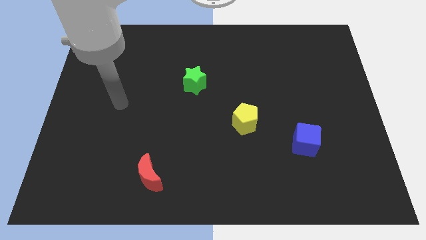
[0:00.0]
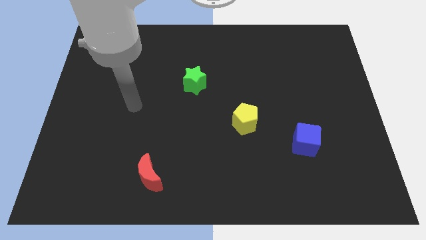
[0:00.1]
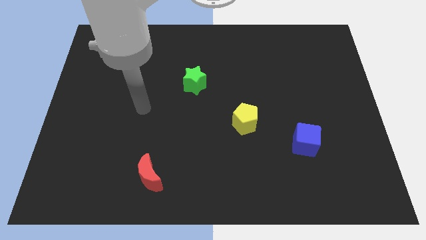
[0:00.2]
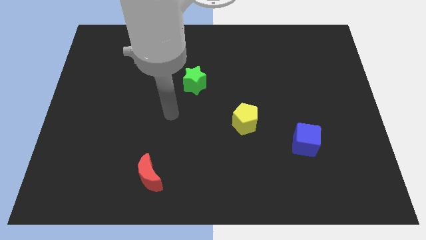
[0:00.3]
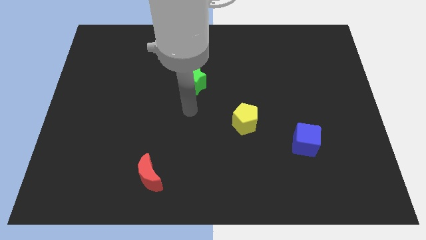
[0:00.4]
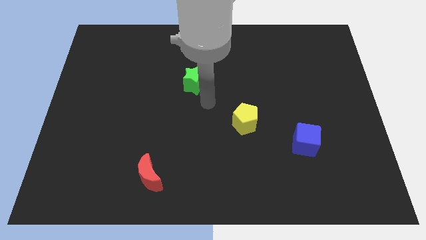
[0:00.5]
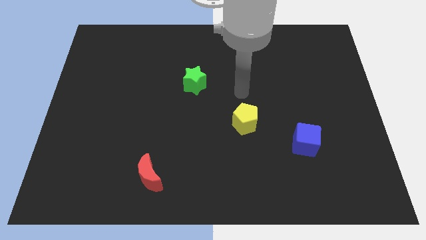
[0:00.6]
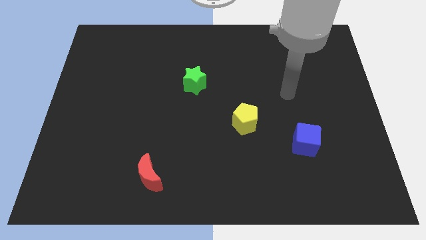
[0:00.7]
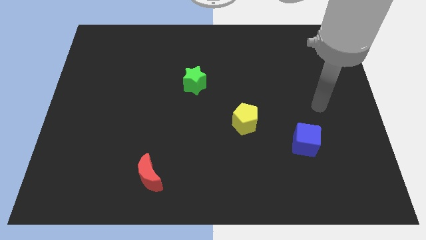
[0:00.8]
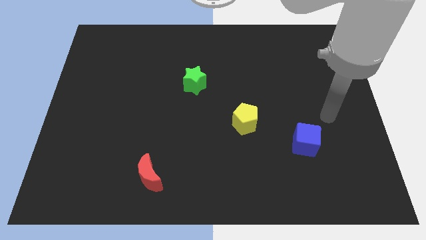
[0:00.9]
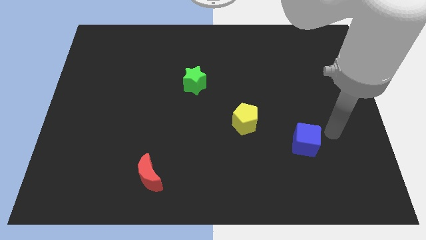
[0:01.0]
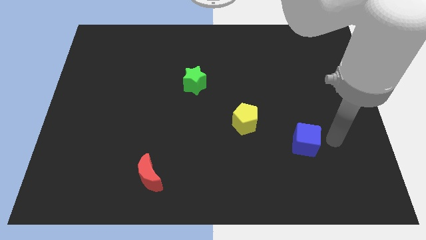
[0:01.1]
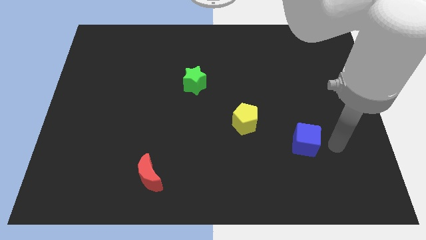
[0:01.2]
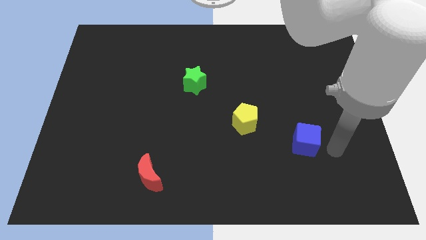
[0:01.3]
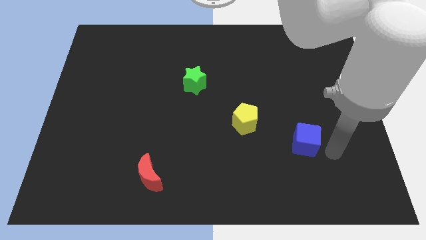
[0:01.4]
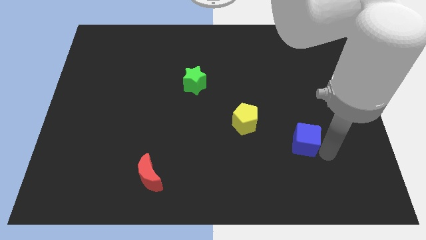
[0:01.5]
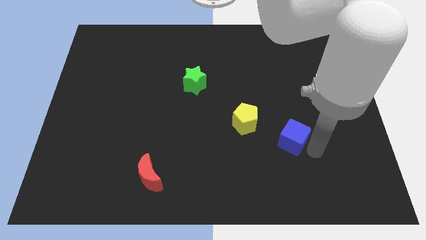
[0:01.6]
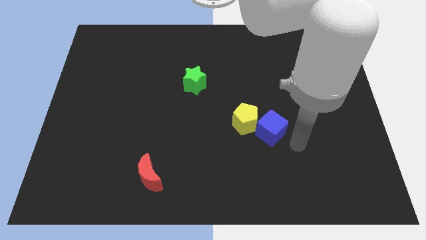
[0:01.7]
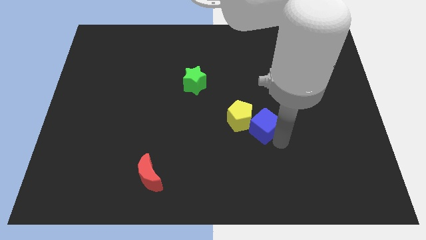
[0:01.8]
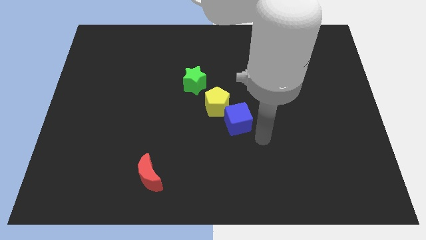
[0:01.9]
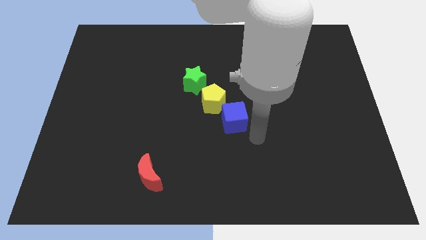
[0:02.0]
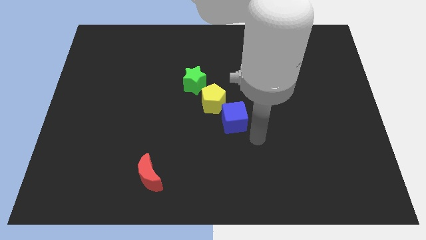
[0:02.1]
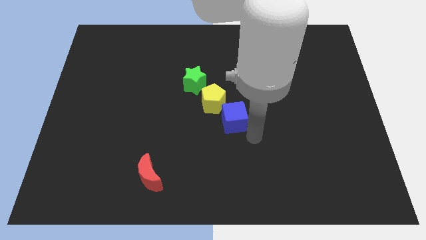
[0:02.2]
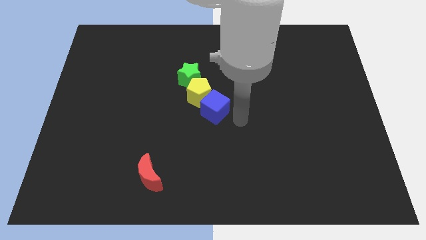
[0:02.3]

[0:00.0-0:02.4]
put the blue cube to the pentagon

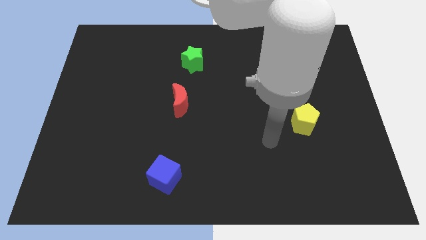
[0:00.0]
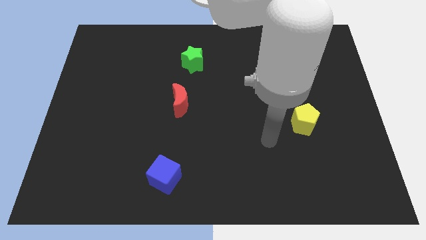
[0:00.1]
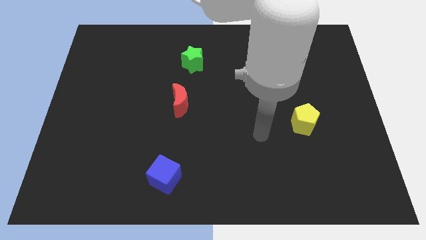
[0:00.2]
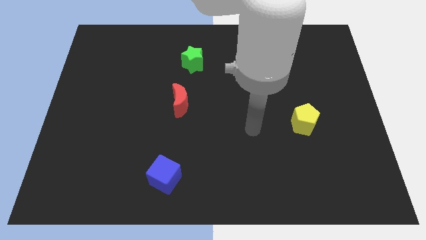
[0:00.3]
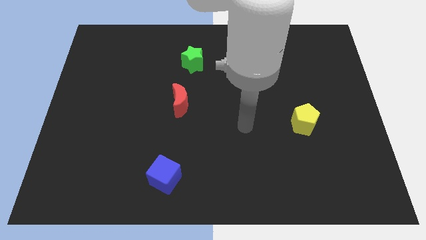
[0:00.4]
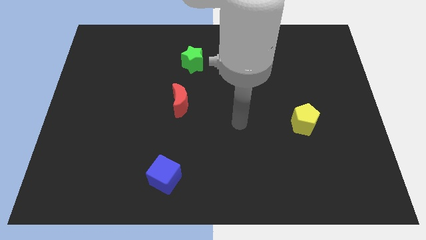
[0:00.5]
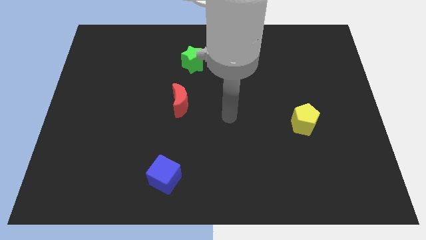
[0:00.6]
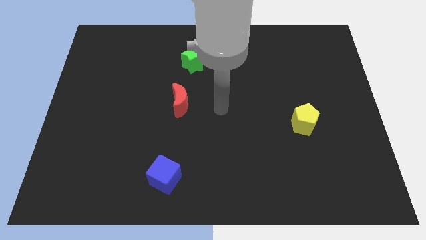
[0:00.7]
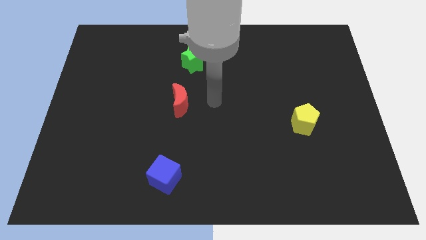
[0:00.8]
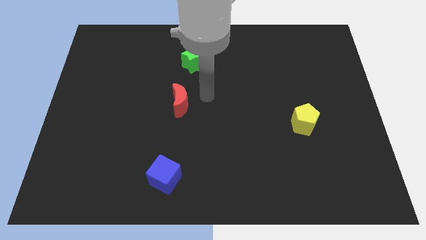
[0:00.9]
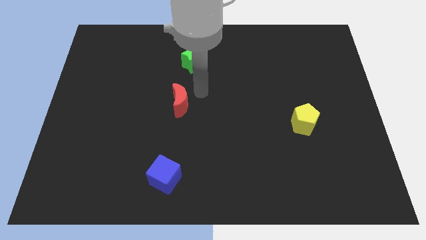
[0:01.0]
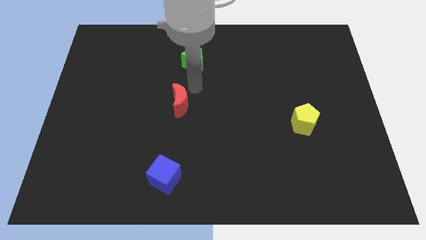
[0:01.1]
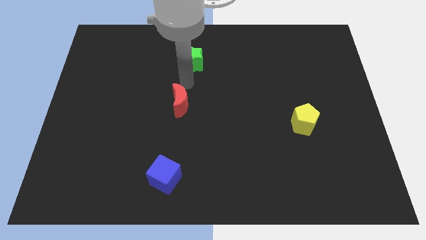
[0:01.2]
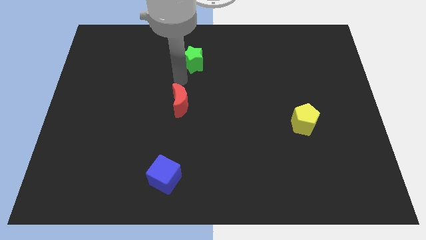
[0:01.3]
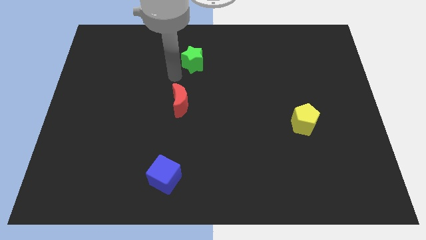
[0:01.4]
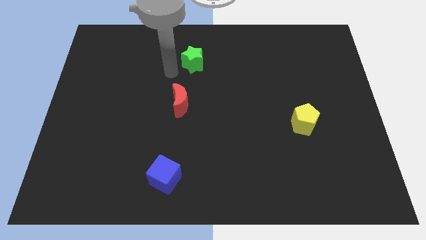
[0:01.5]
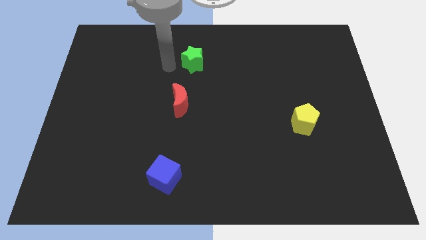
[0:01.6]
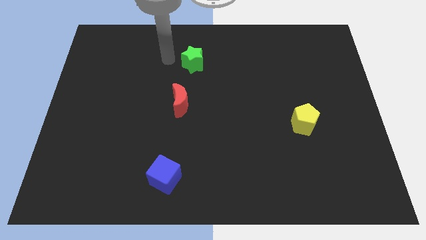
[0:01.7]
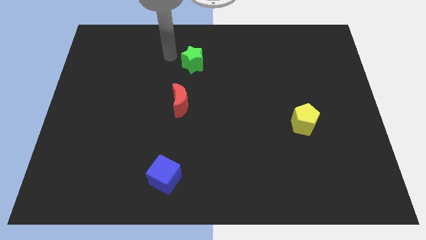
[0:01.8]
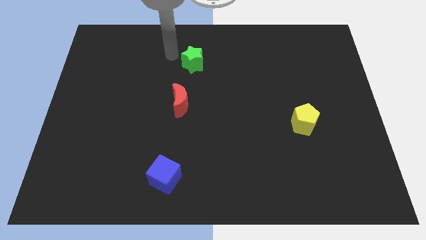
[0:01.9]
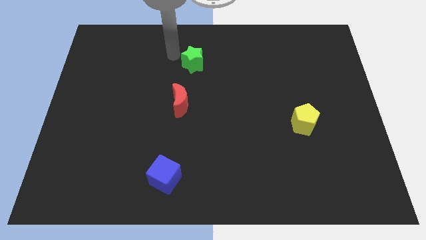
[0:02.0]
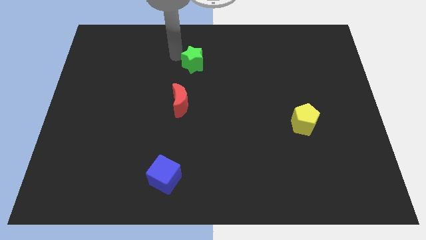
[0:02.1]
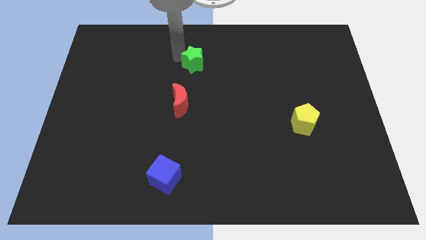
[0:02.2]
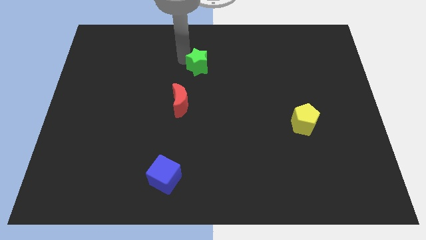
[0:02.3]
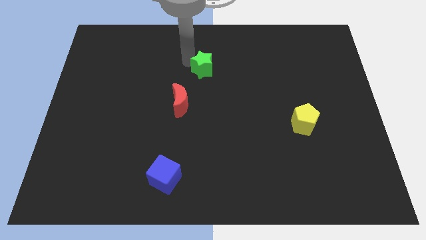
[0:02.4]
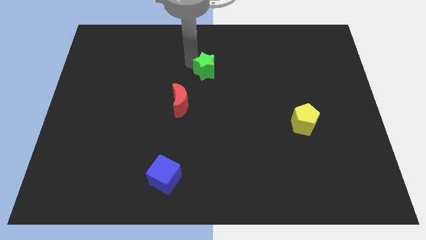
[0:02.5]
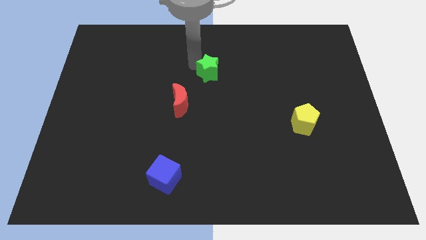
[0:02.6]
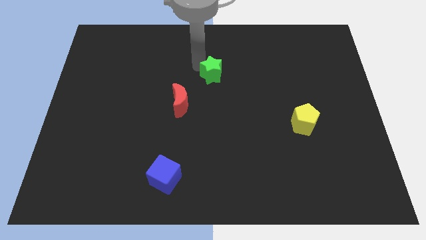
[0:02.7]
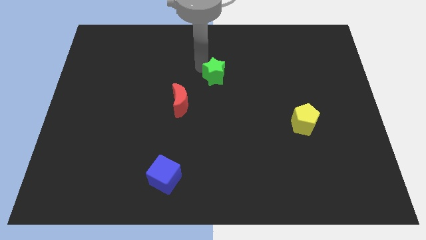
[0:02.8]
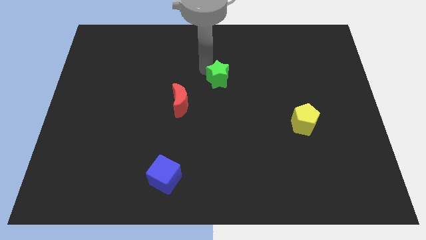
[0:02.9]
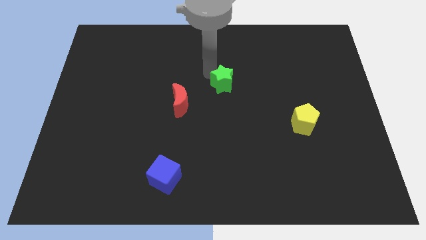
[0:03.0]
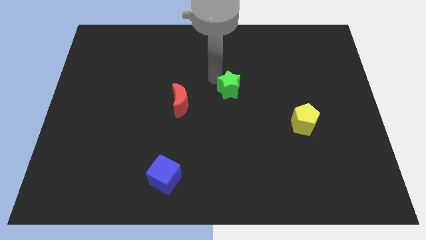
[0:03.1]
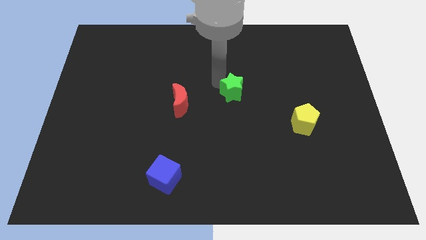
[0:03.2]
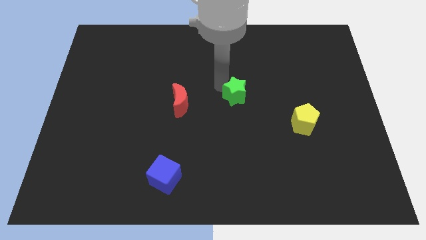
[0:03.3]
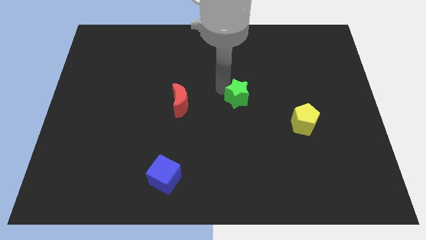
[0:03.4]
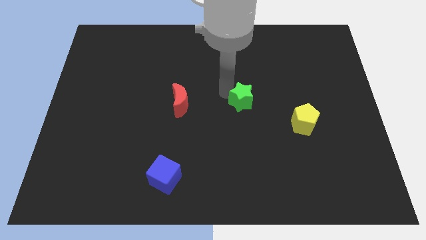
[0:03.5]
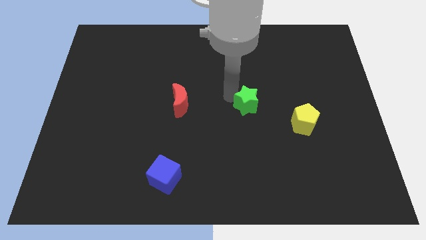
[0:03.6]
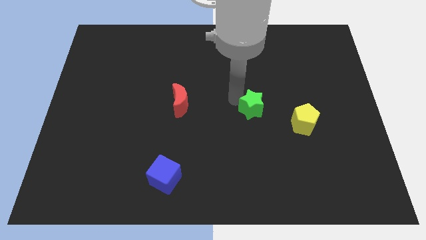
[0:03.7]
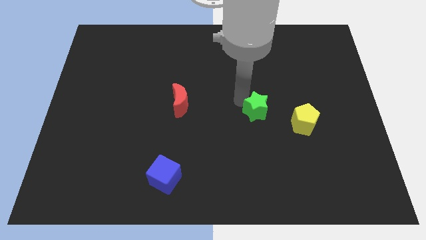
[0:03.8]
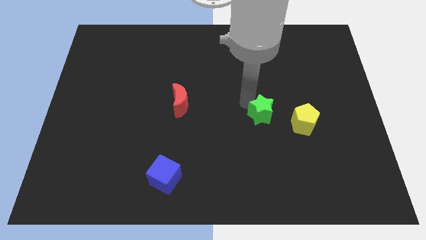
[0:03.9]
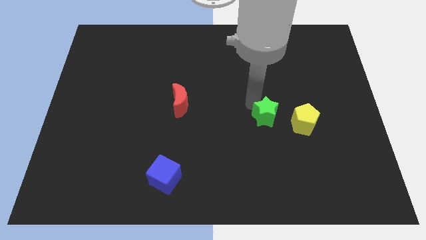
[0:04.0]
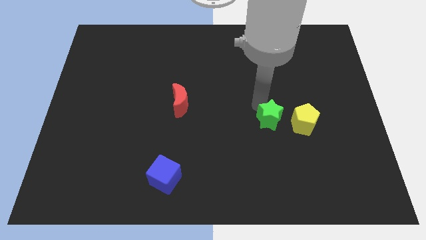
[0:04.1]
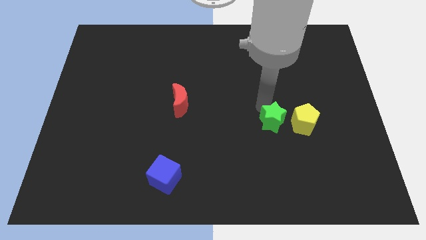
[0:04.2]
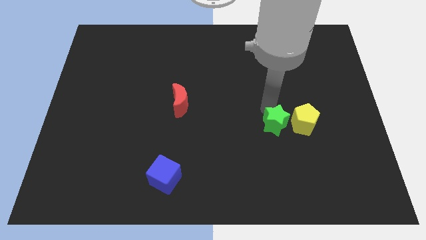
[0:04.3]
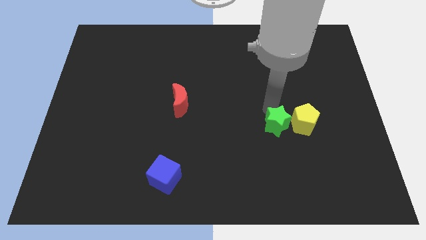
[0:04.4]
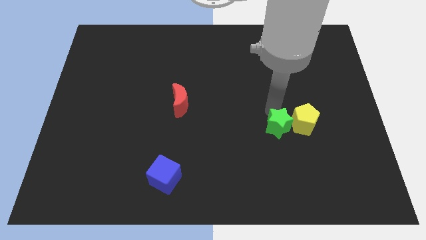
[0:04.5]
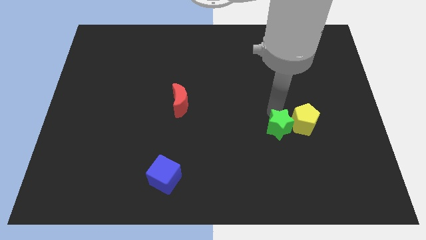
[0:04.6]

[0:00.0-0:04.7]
put the green block close to the yellow pentagon

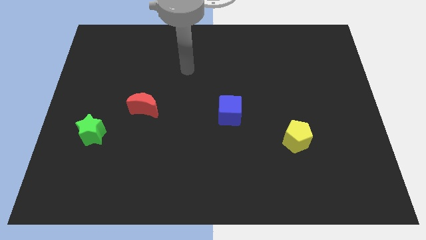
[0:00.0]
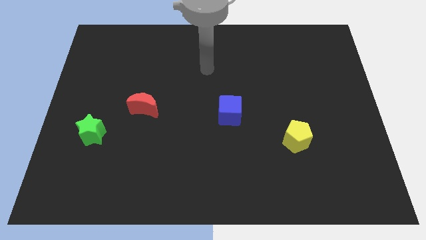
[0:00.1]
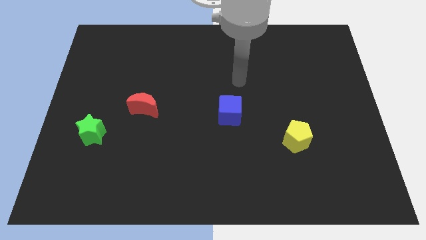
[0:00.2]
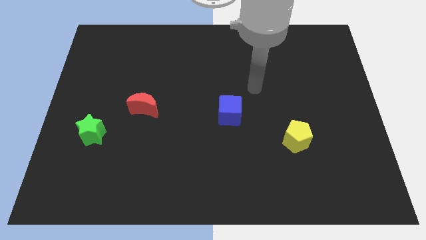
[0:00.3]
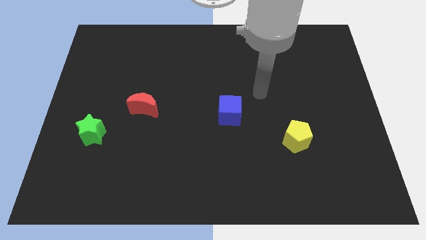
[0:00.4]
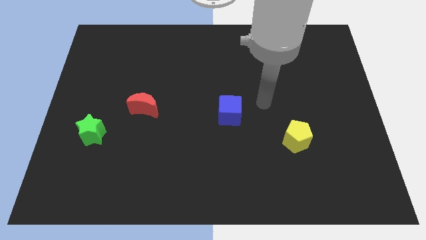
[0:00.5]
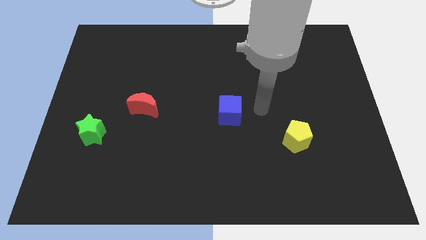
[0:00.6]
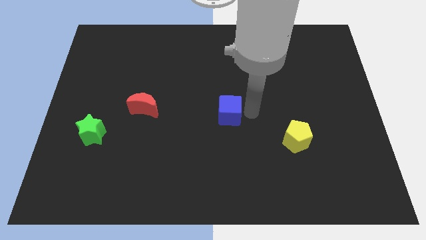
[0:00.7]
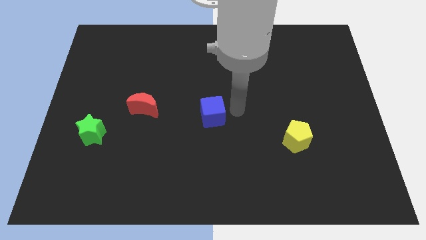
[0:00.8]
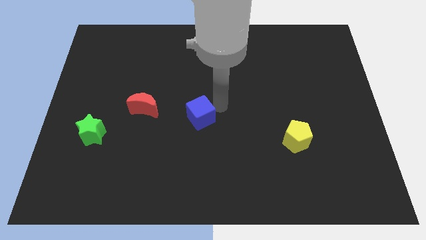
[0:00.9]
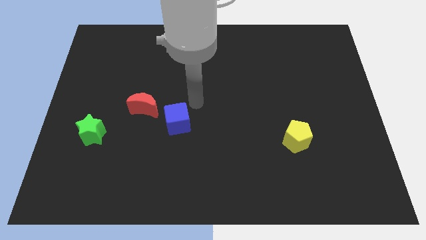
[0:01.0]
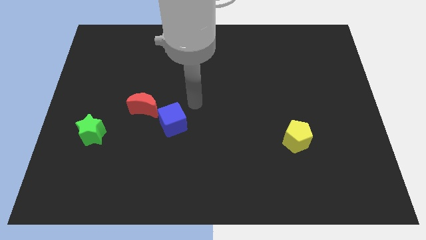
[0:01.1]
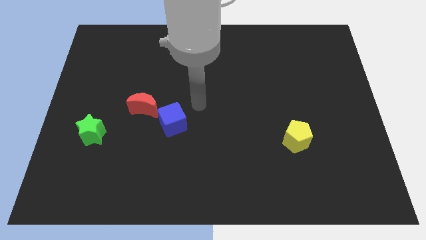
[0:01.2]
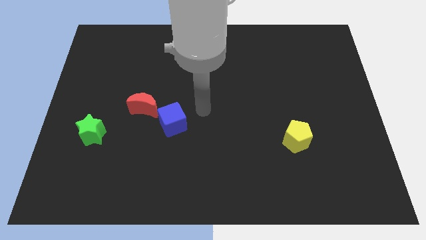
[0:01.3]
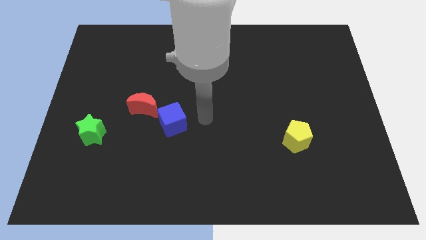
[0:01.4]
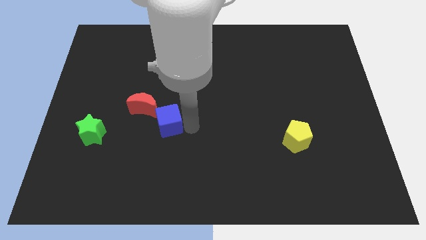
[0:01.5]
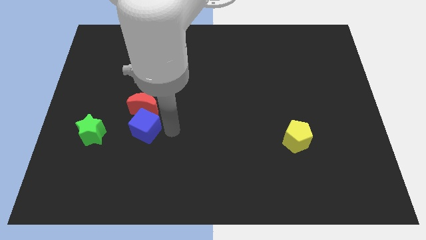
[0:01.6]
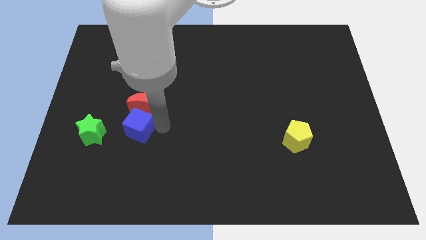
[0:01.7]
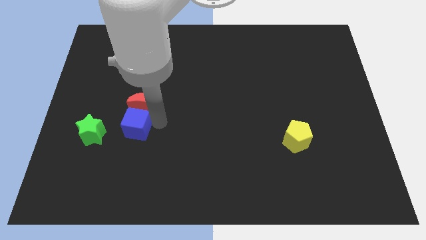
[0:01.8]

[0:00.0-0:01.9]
slide the blue block next to the red block
